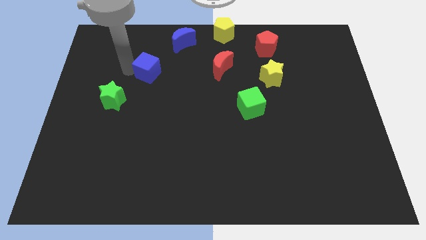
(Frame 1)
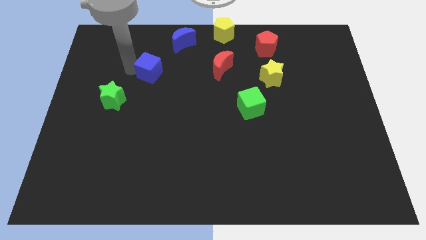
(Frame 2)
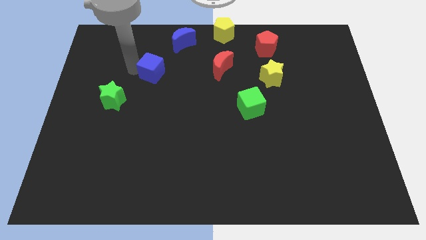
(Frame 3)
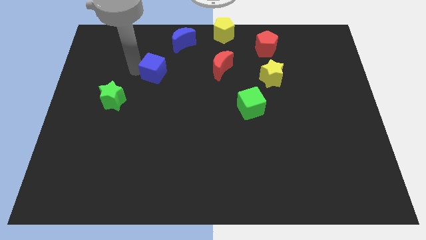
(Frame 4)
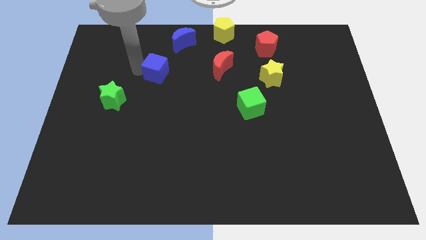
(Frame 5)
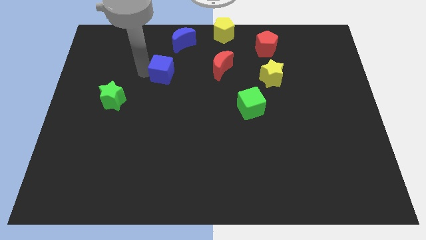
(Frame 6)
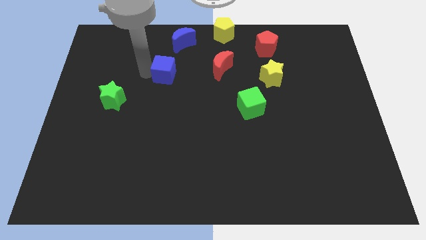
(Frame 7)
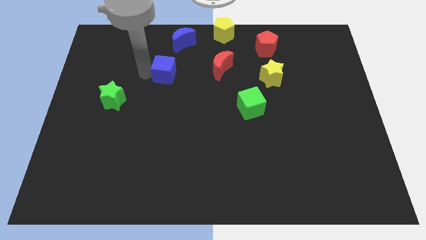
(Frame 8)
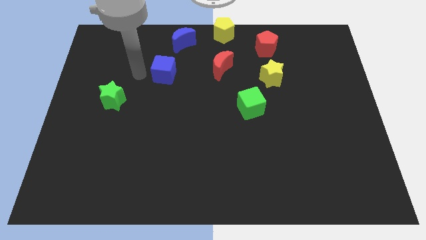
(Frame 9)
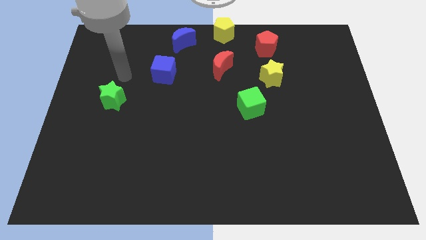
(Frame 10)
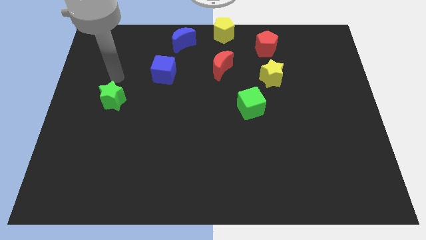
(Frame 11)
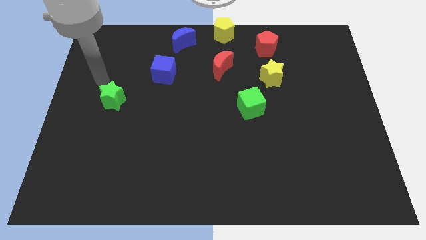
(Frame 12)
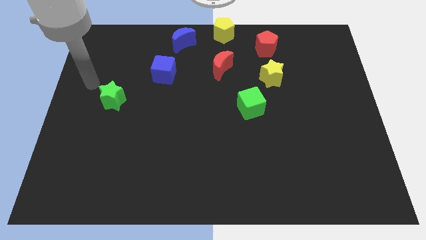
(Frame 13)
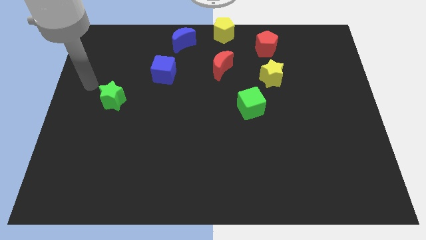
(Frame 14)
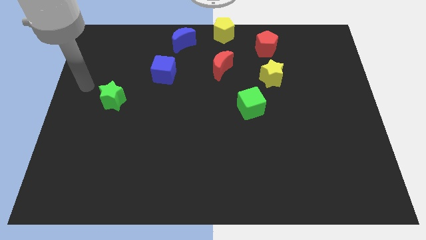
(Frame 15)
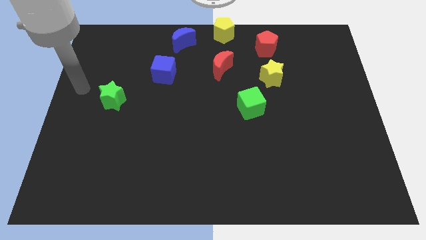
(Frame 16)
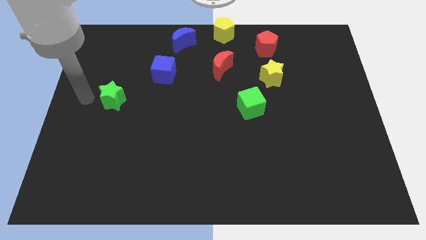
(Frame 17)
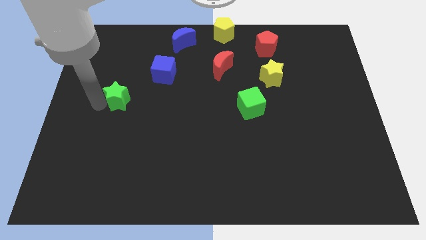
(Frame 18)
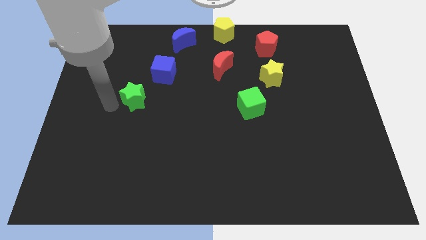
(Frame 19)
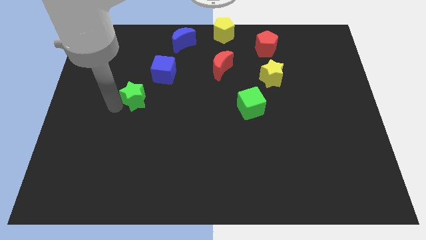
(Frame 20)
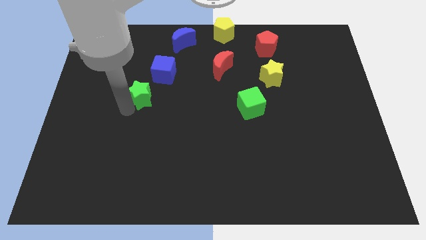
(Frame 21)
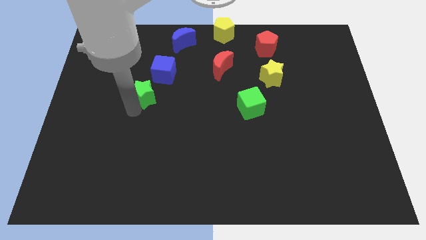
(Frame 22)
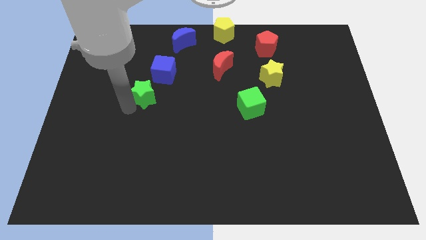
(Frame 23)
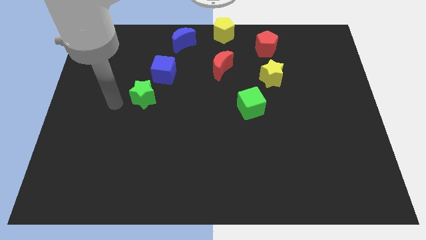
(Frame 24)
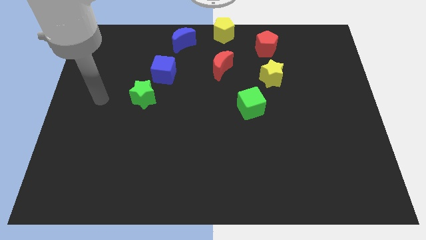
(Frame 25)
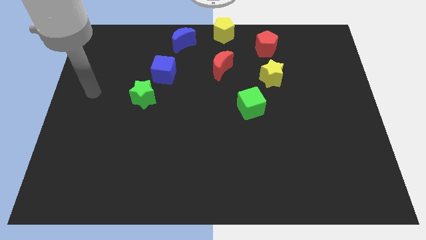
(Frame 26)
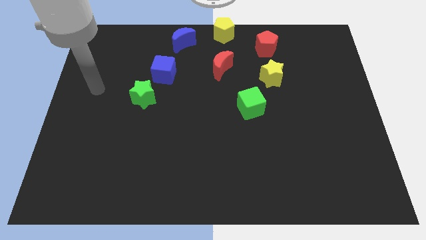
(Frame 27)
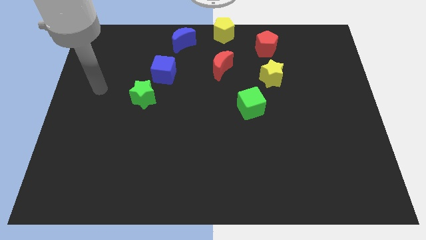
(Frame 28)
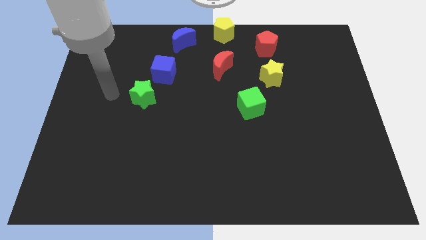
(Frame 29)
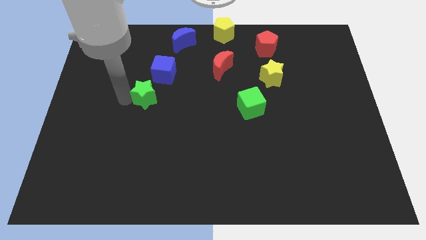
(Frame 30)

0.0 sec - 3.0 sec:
place green star below blue cube

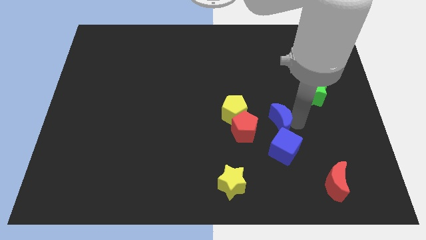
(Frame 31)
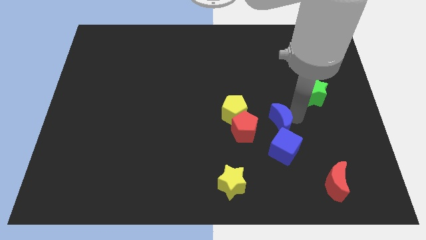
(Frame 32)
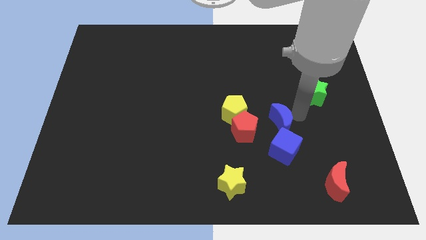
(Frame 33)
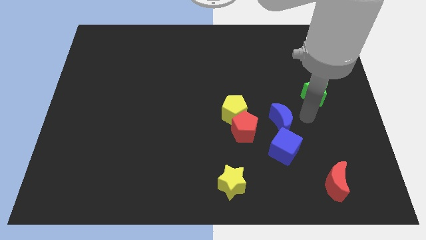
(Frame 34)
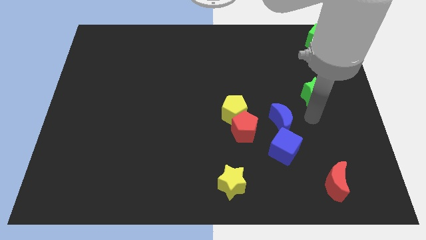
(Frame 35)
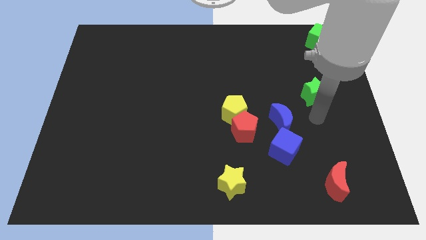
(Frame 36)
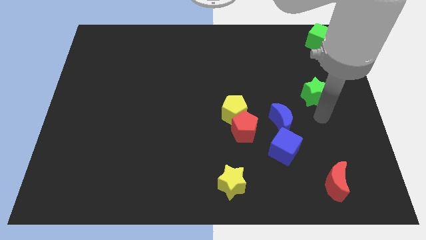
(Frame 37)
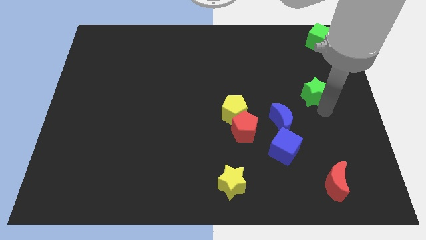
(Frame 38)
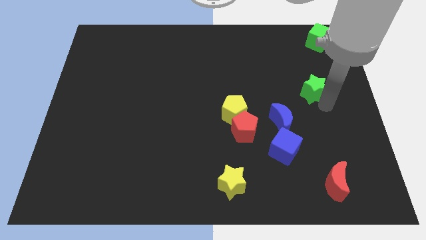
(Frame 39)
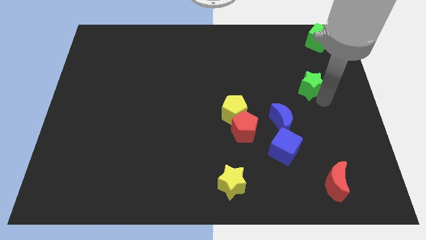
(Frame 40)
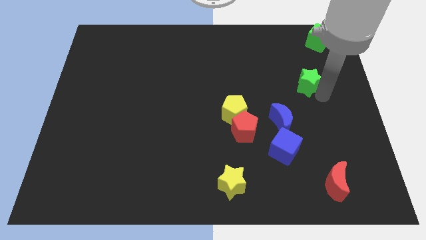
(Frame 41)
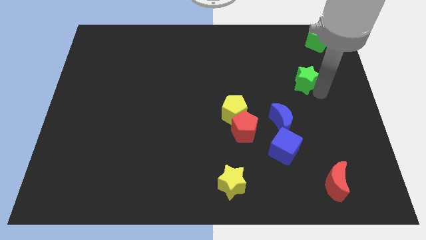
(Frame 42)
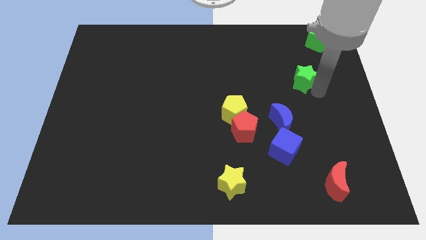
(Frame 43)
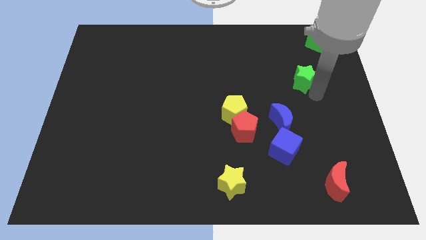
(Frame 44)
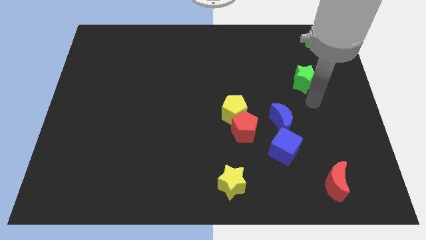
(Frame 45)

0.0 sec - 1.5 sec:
place the green star in between the blue moon and green cube

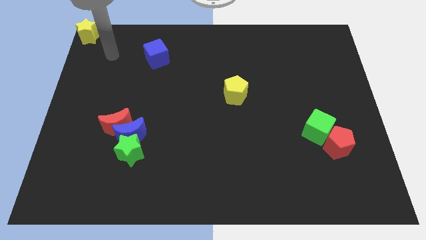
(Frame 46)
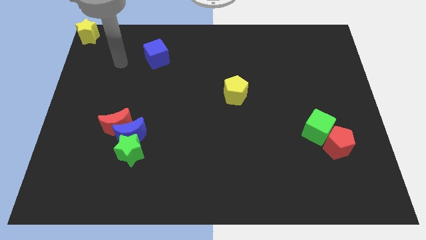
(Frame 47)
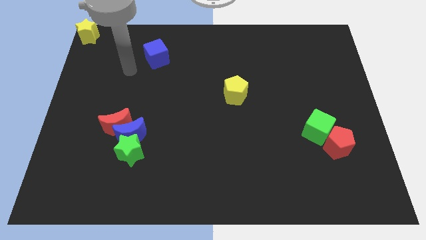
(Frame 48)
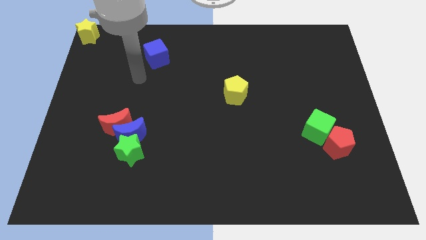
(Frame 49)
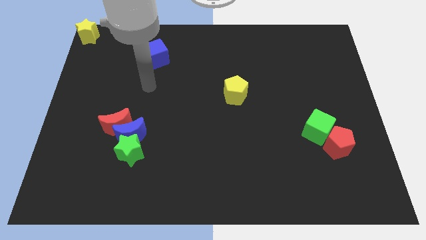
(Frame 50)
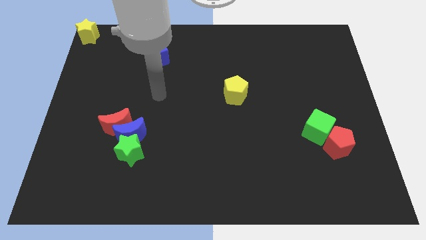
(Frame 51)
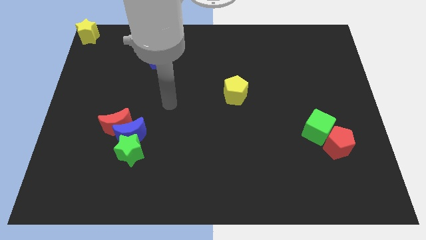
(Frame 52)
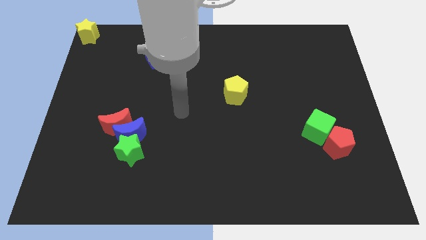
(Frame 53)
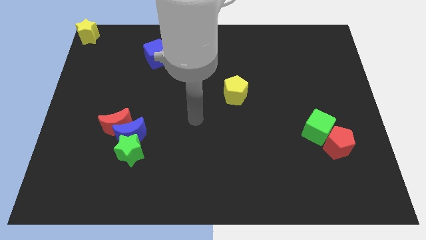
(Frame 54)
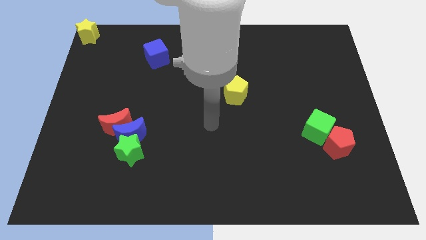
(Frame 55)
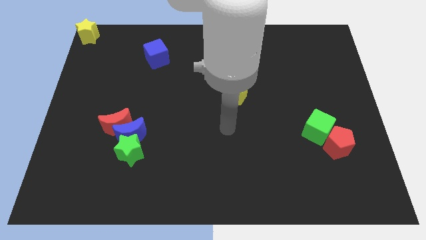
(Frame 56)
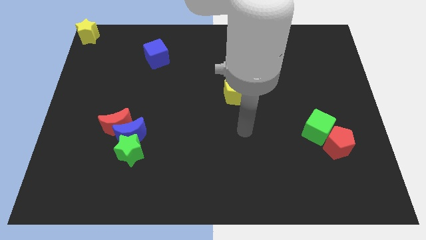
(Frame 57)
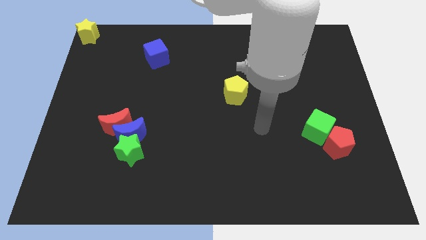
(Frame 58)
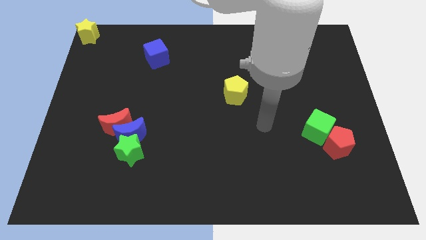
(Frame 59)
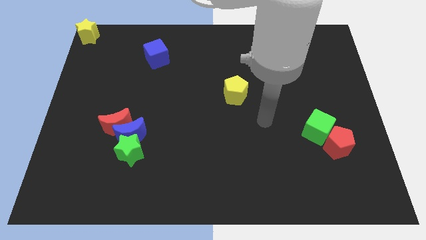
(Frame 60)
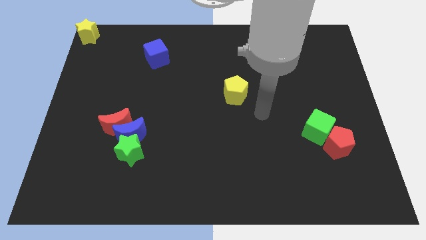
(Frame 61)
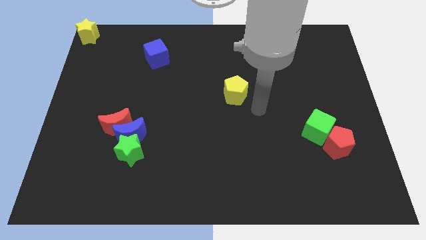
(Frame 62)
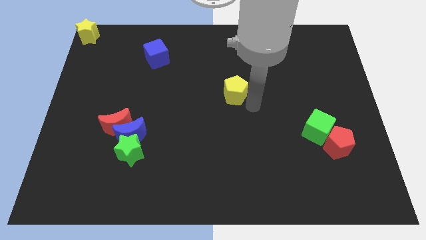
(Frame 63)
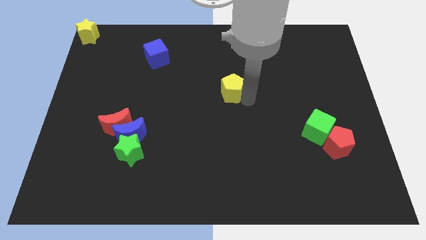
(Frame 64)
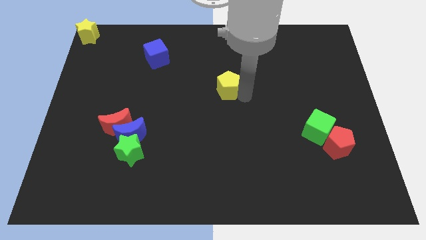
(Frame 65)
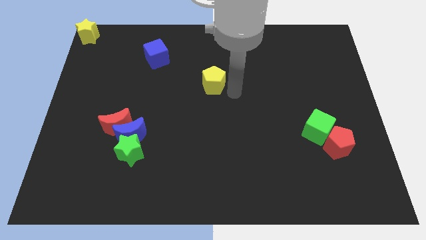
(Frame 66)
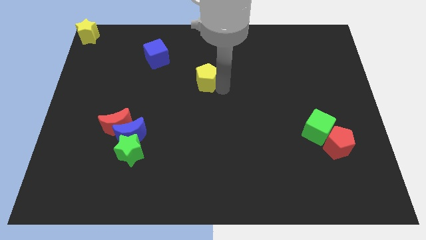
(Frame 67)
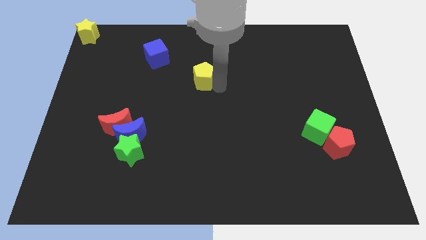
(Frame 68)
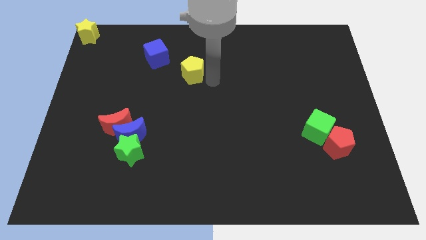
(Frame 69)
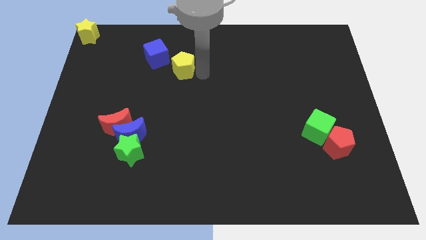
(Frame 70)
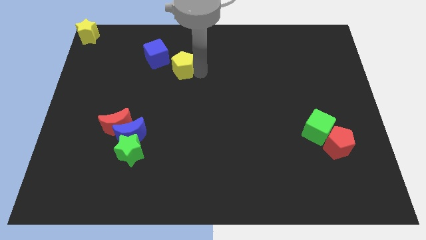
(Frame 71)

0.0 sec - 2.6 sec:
push the yellow pentagon towards the blue cube

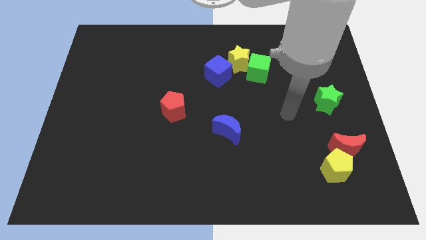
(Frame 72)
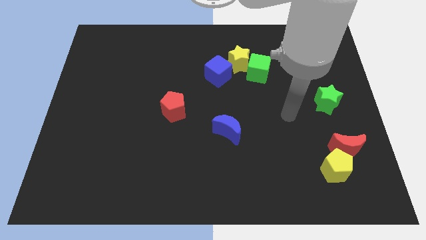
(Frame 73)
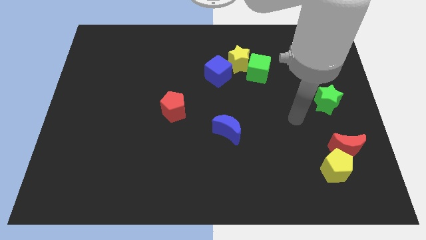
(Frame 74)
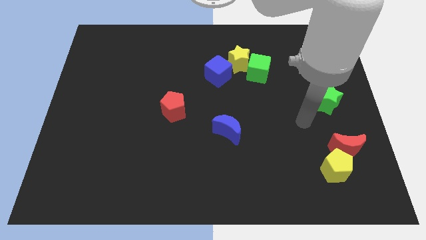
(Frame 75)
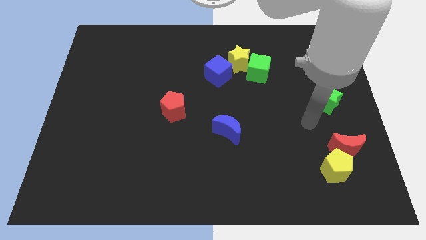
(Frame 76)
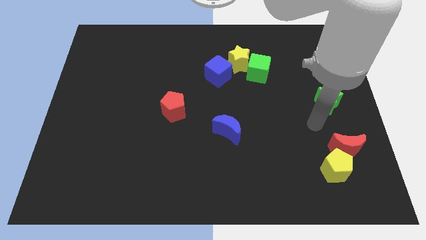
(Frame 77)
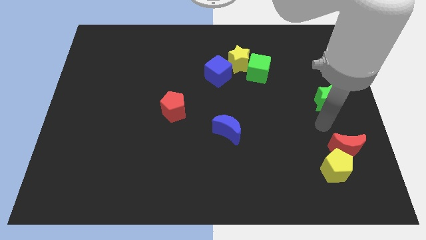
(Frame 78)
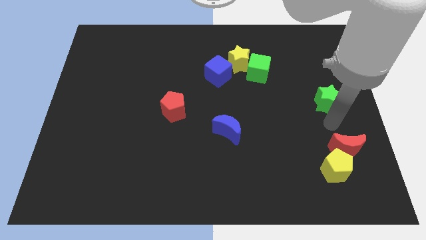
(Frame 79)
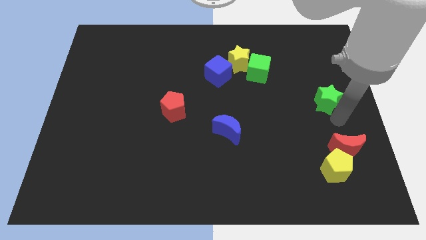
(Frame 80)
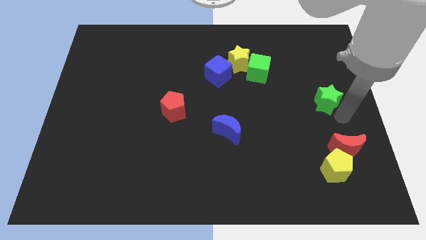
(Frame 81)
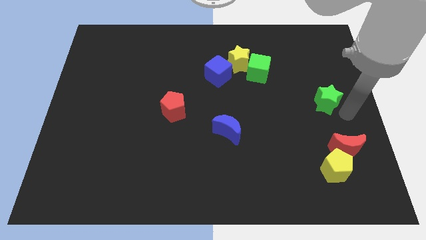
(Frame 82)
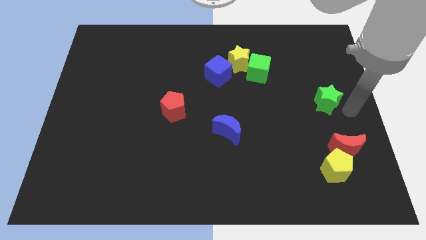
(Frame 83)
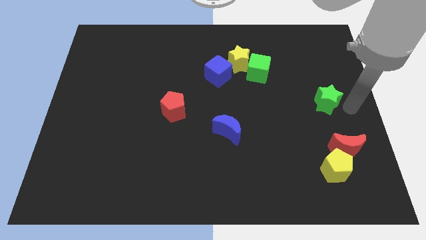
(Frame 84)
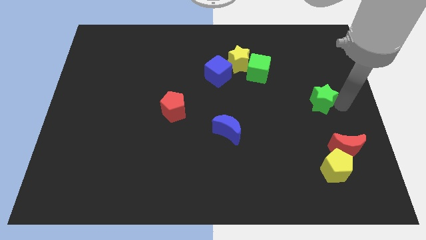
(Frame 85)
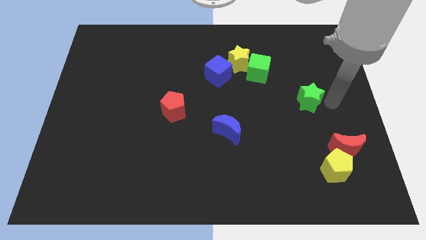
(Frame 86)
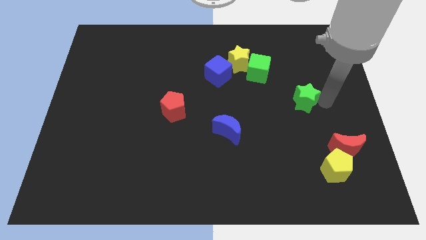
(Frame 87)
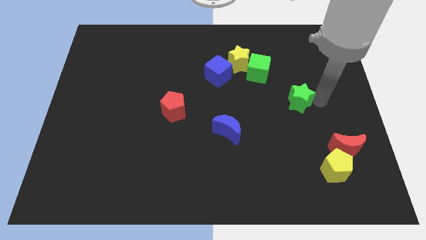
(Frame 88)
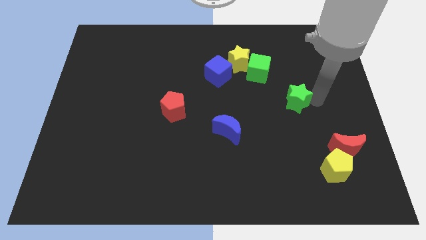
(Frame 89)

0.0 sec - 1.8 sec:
place the green star between the green cube and red crescent
